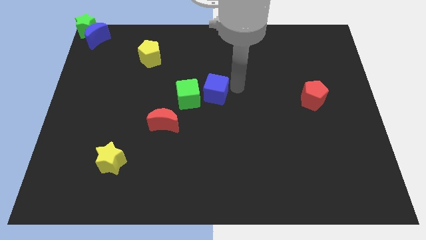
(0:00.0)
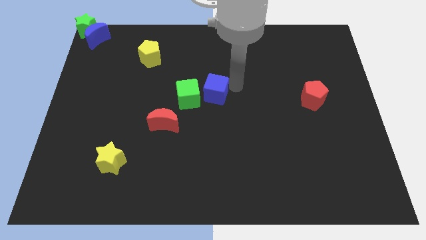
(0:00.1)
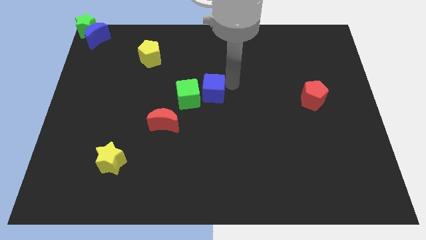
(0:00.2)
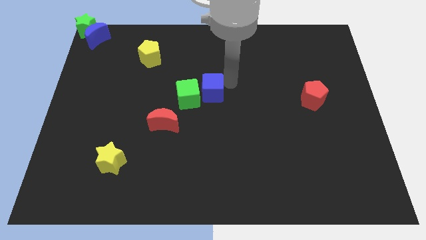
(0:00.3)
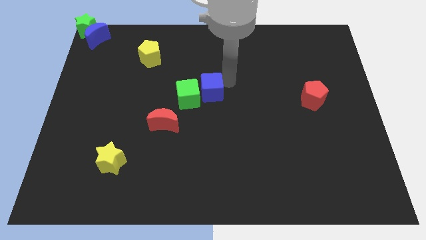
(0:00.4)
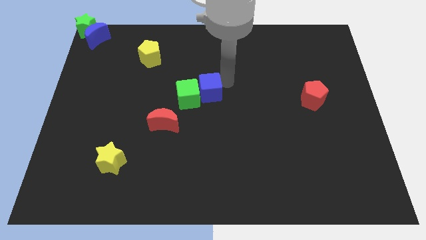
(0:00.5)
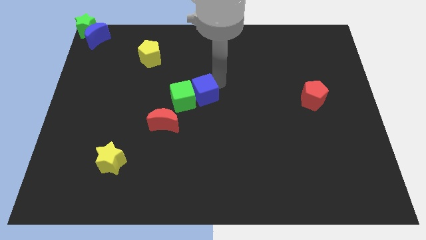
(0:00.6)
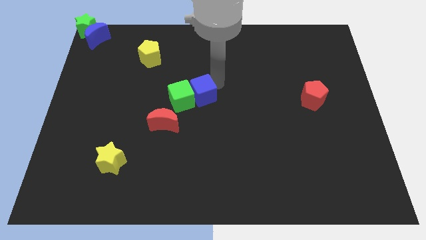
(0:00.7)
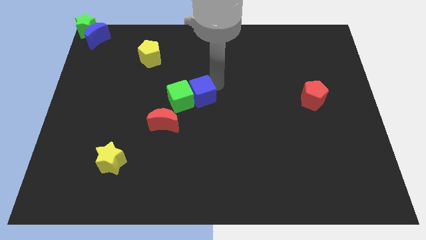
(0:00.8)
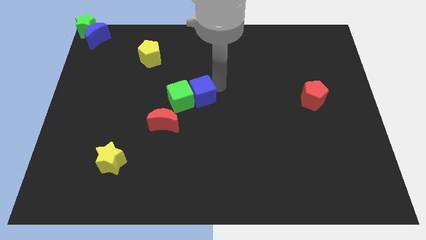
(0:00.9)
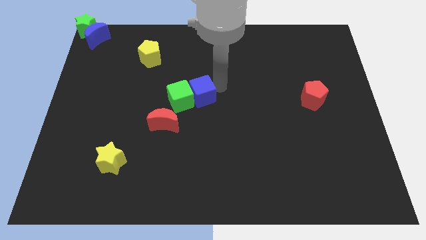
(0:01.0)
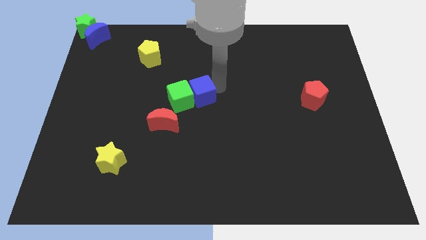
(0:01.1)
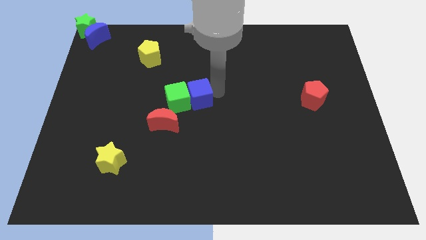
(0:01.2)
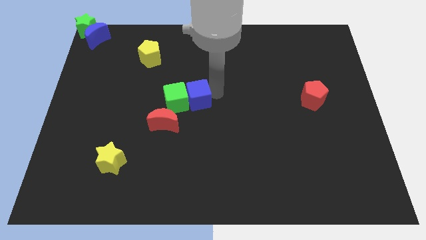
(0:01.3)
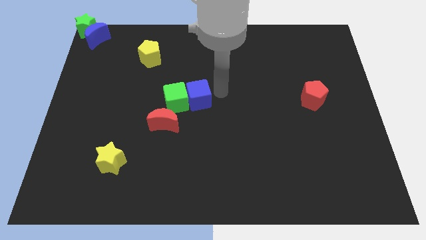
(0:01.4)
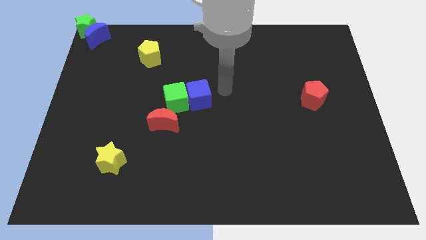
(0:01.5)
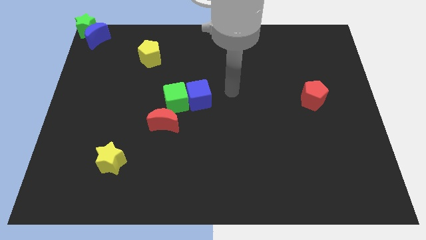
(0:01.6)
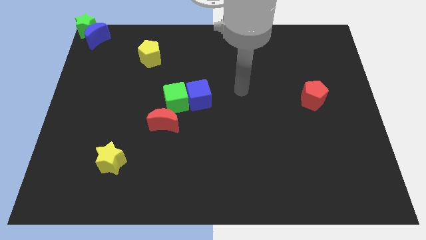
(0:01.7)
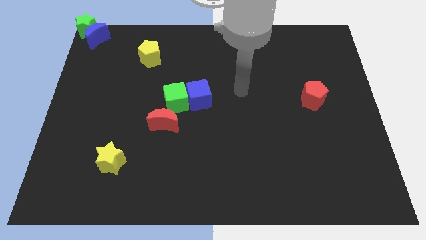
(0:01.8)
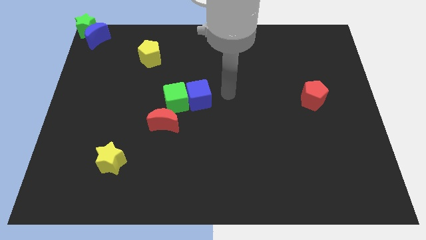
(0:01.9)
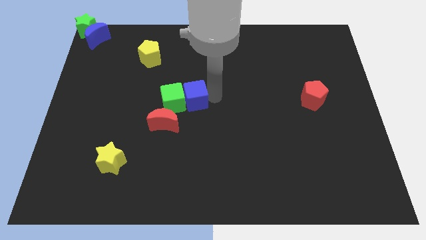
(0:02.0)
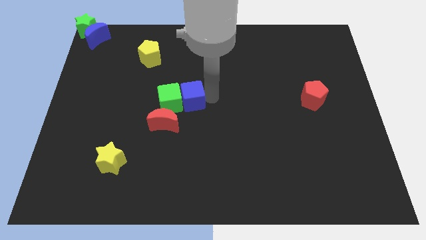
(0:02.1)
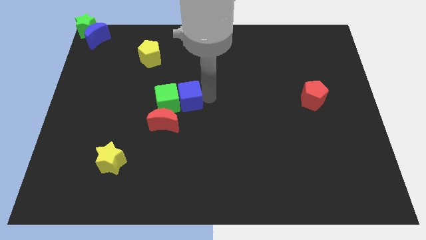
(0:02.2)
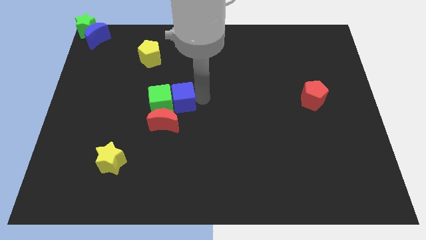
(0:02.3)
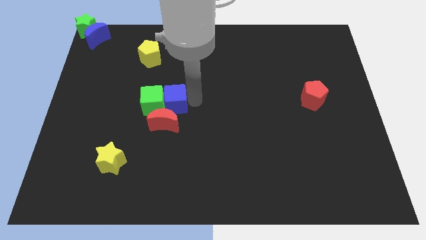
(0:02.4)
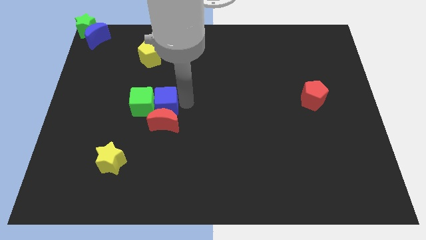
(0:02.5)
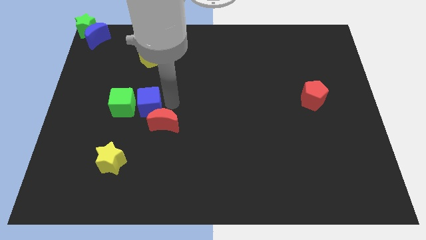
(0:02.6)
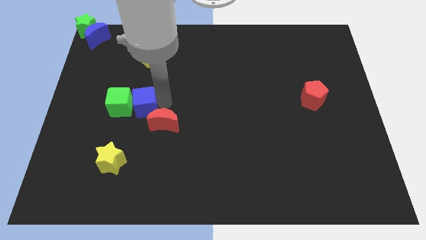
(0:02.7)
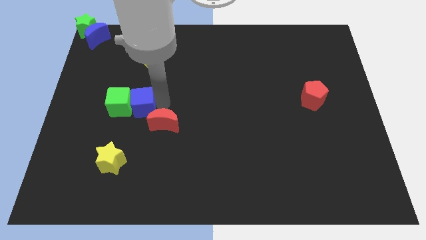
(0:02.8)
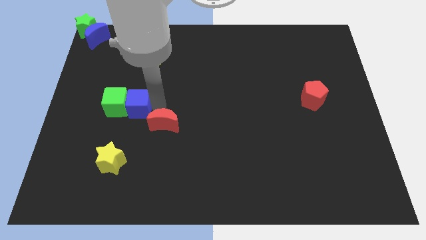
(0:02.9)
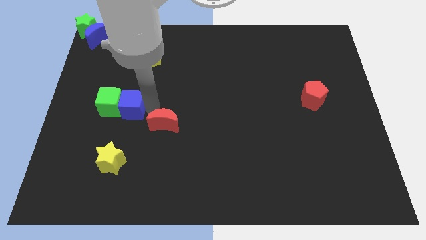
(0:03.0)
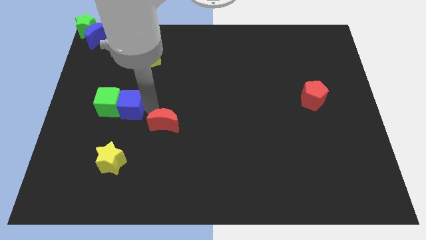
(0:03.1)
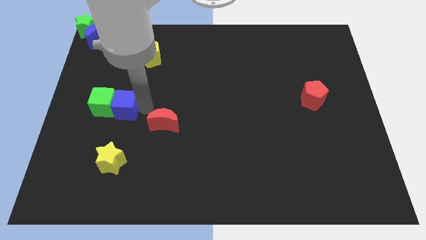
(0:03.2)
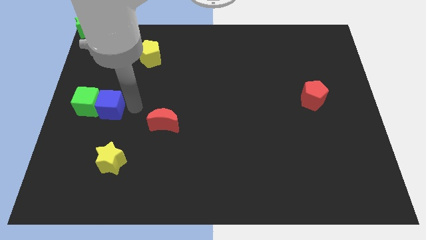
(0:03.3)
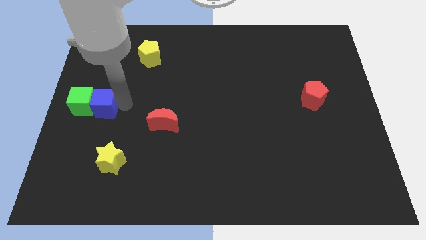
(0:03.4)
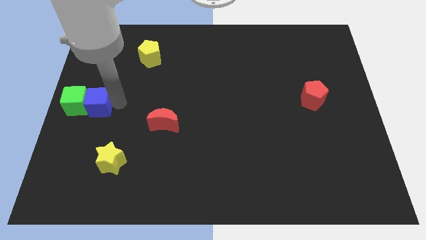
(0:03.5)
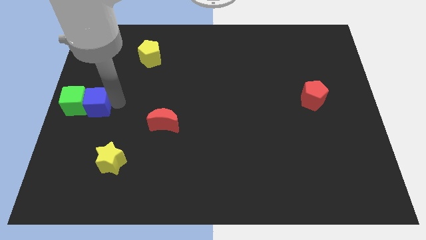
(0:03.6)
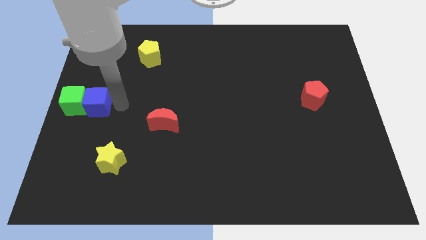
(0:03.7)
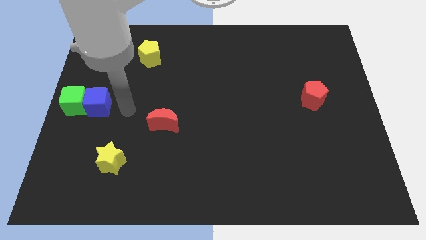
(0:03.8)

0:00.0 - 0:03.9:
move the blue cube and green cube at the center left of the board

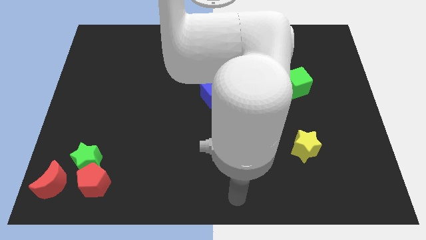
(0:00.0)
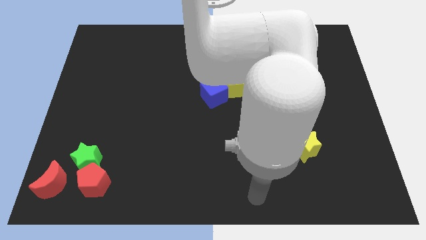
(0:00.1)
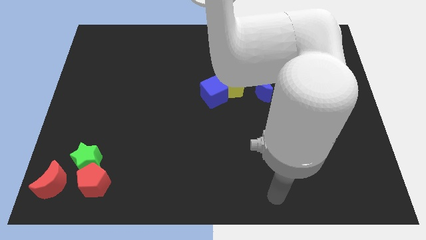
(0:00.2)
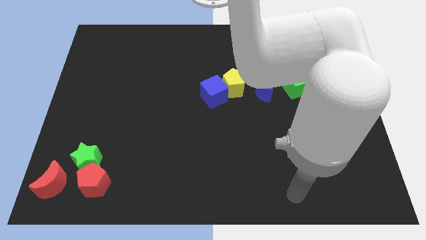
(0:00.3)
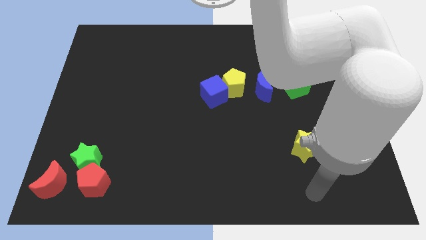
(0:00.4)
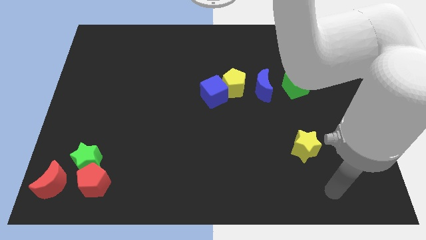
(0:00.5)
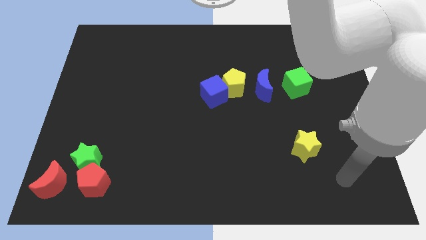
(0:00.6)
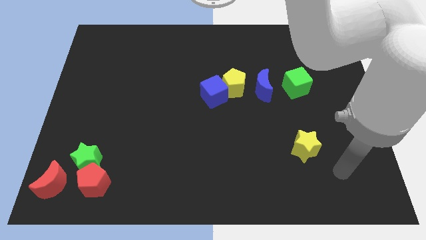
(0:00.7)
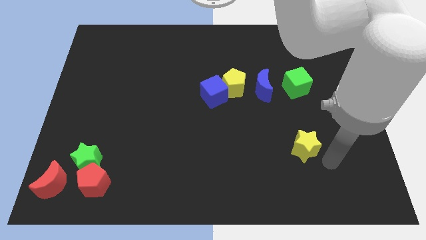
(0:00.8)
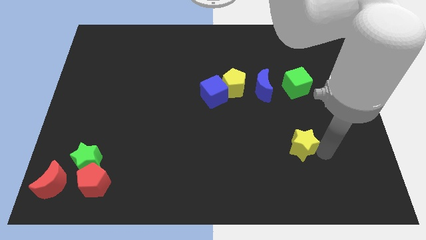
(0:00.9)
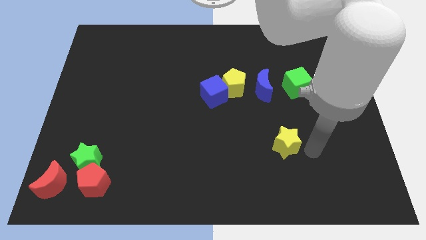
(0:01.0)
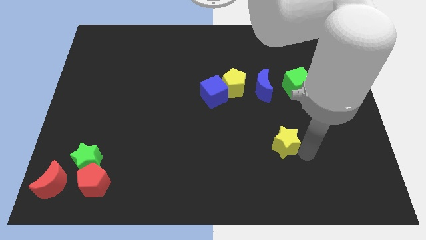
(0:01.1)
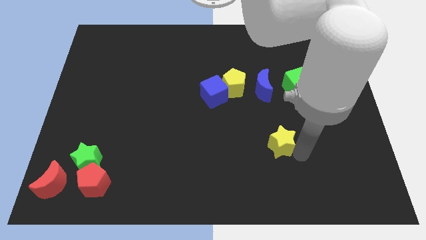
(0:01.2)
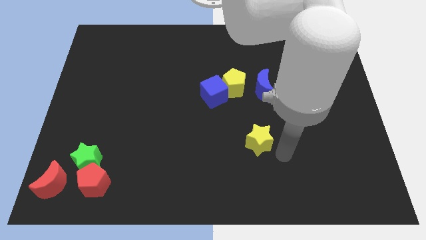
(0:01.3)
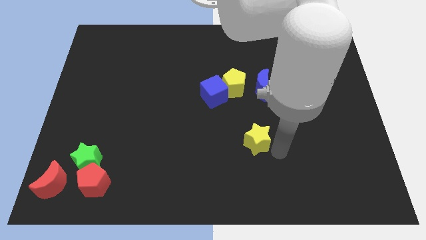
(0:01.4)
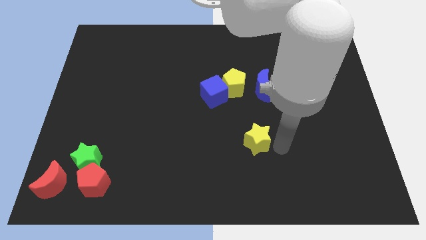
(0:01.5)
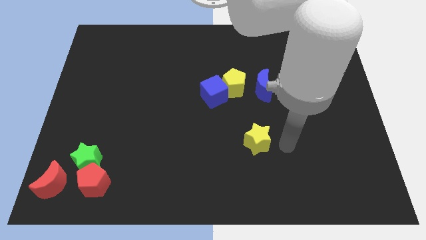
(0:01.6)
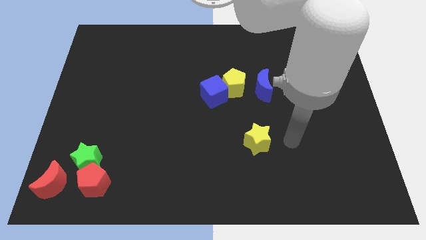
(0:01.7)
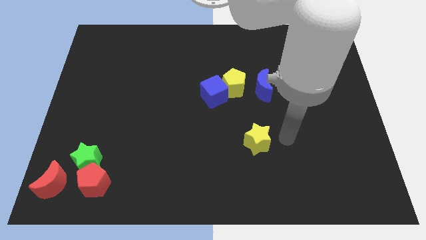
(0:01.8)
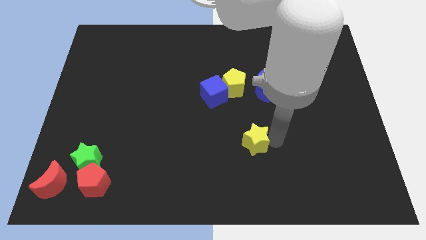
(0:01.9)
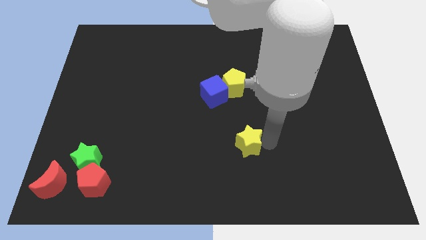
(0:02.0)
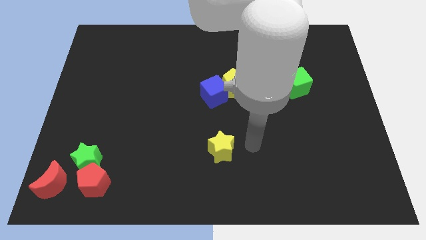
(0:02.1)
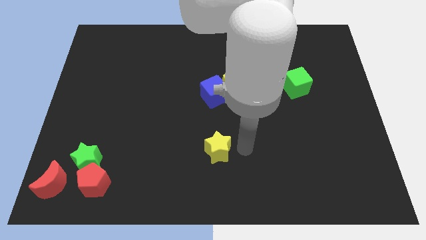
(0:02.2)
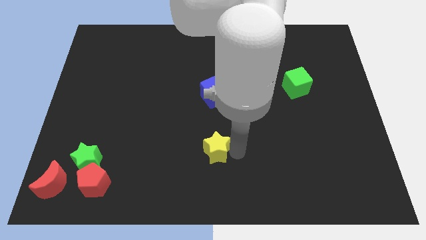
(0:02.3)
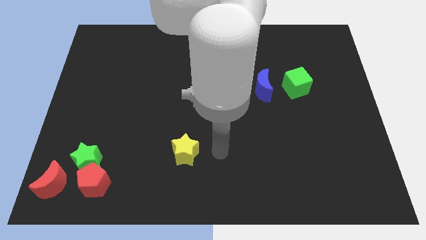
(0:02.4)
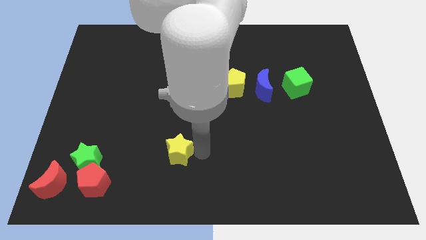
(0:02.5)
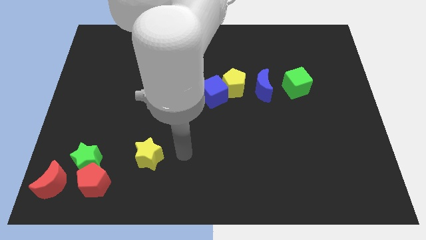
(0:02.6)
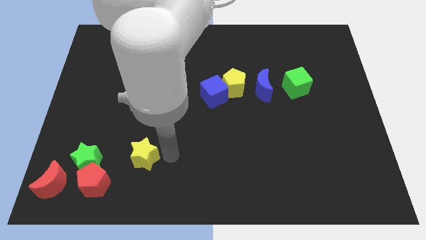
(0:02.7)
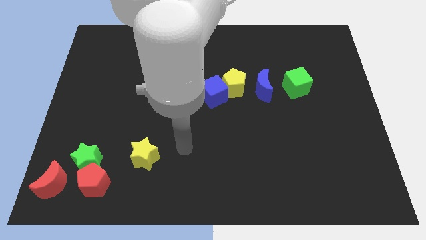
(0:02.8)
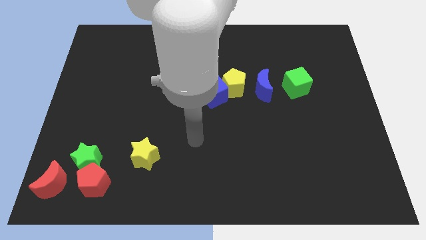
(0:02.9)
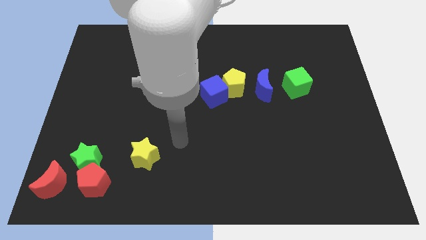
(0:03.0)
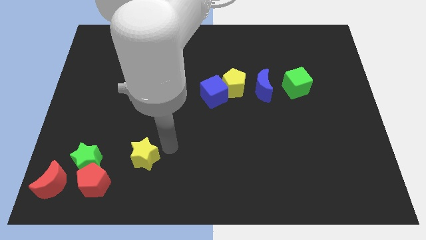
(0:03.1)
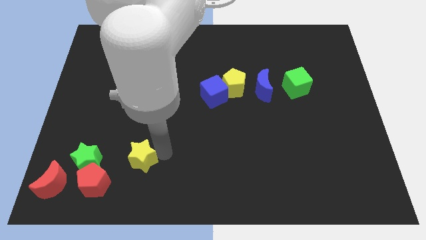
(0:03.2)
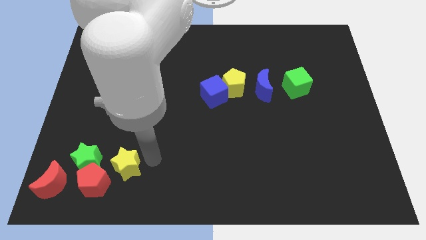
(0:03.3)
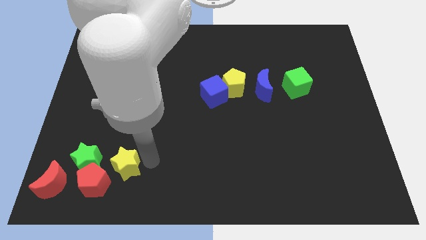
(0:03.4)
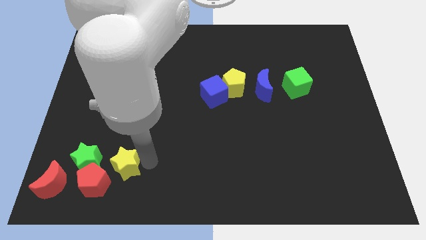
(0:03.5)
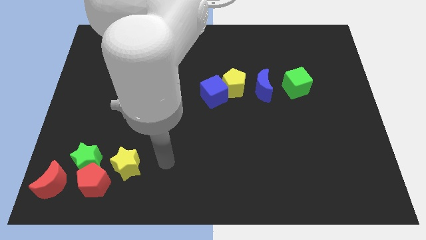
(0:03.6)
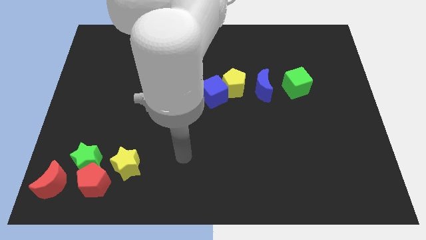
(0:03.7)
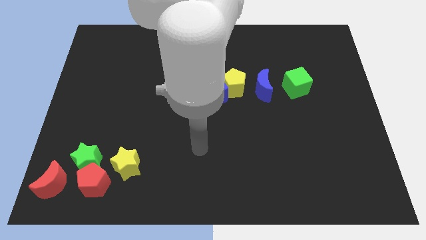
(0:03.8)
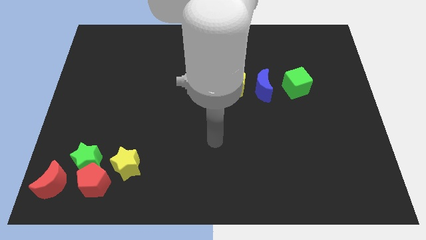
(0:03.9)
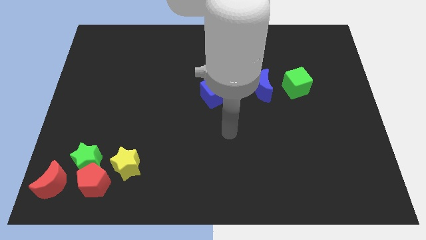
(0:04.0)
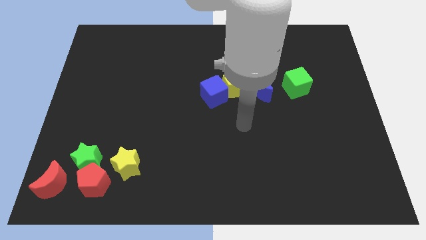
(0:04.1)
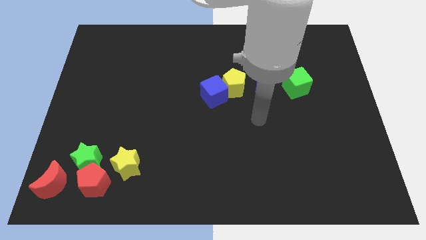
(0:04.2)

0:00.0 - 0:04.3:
push the yellow star right to the green star

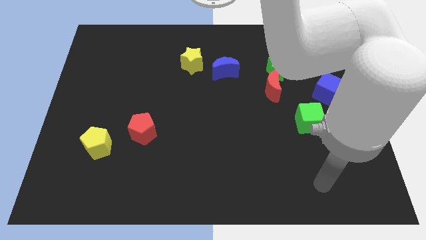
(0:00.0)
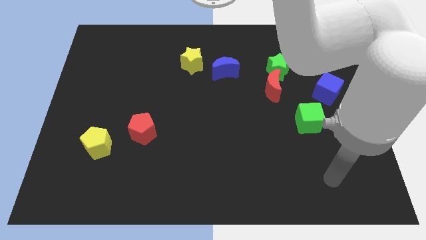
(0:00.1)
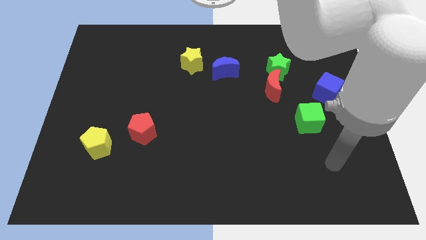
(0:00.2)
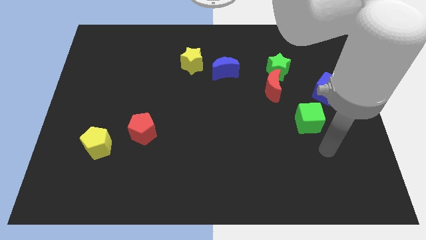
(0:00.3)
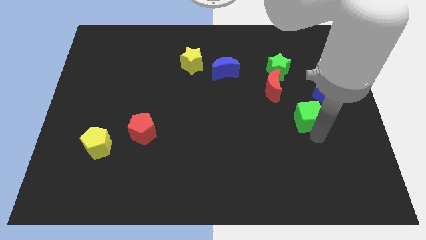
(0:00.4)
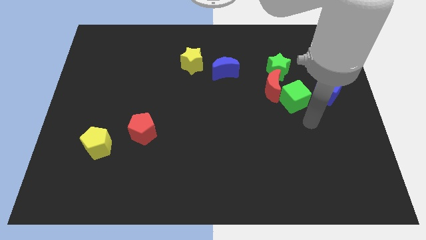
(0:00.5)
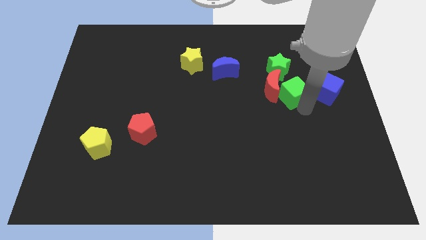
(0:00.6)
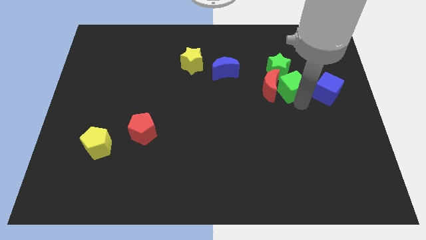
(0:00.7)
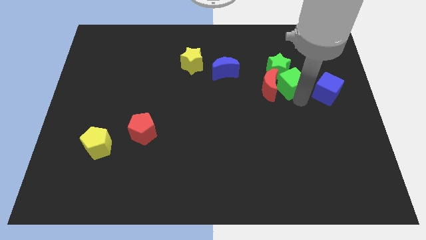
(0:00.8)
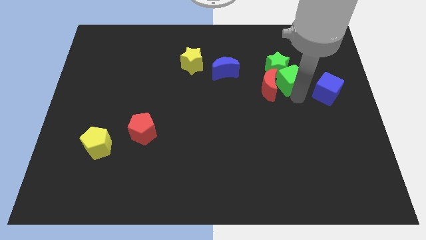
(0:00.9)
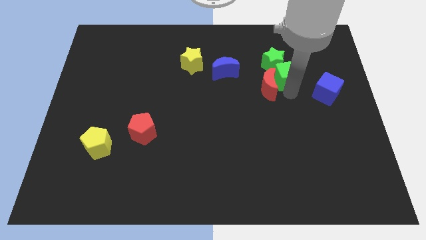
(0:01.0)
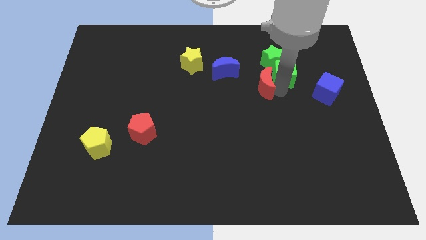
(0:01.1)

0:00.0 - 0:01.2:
push the green cube into the green star
